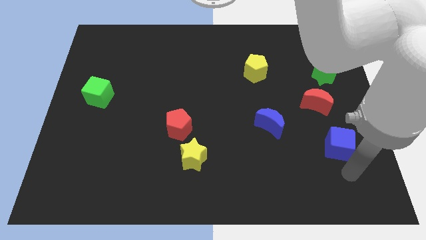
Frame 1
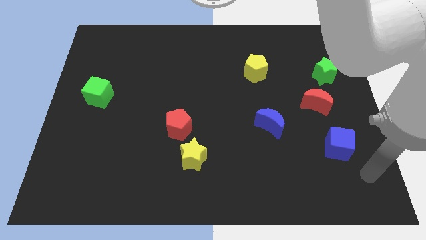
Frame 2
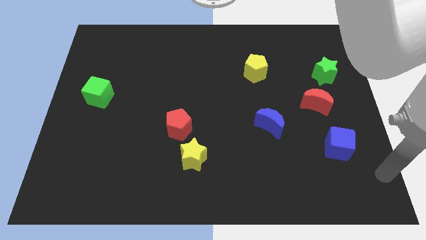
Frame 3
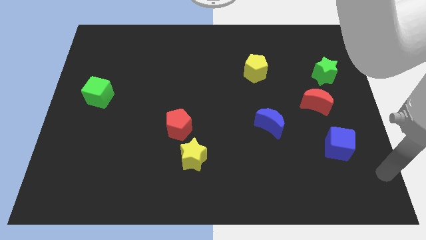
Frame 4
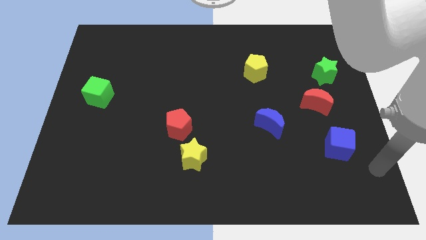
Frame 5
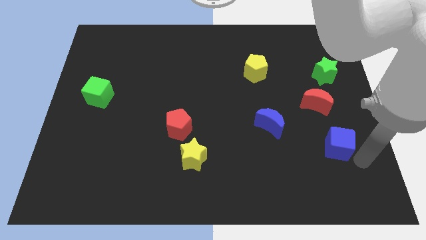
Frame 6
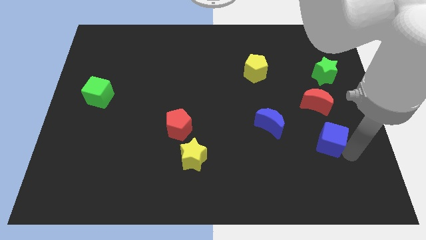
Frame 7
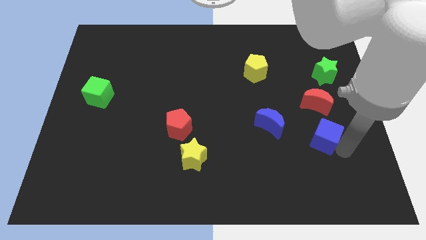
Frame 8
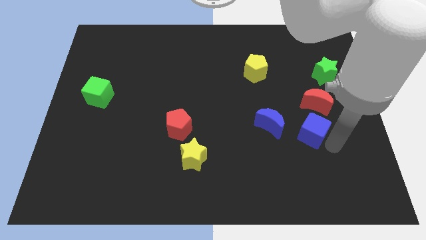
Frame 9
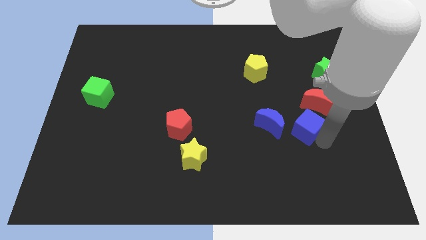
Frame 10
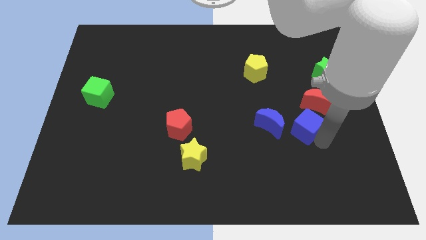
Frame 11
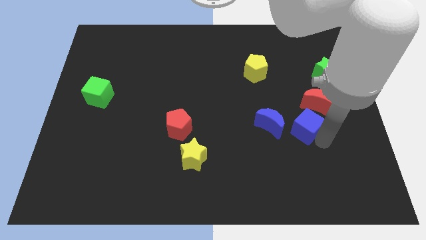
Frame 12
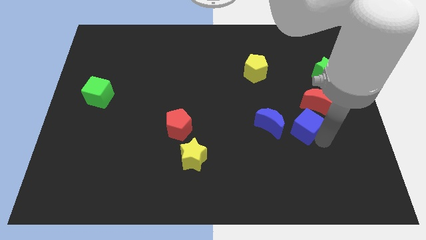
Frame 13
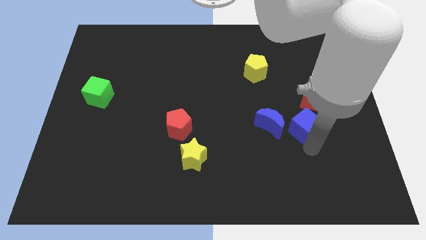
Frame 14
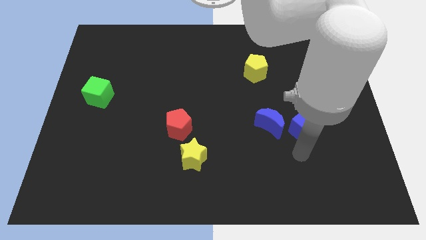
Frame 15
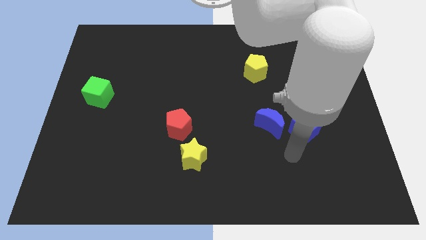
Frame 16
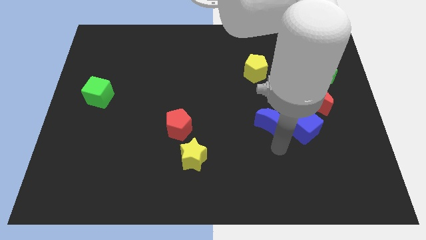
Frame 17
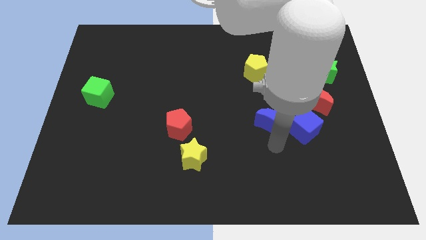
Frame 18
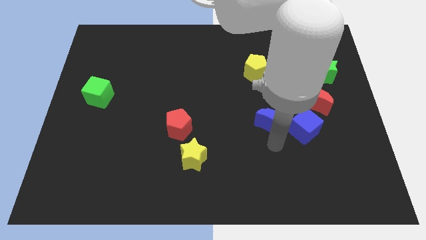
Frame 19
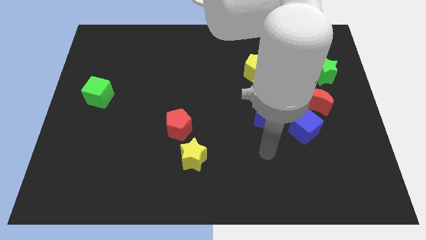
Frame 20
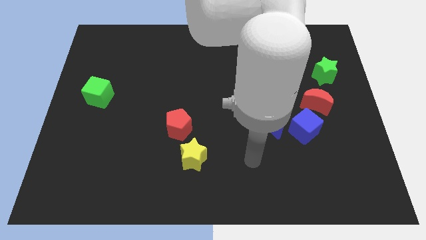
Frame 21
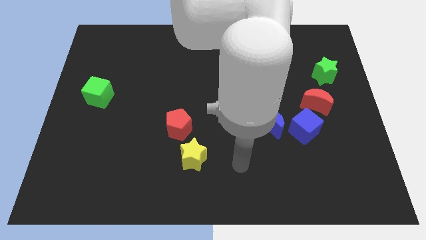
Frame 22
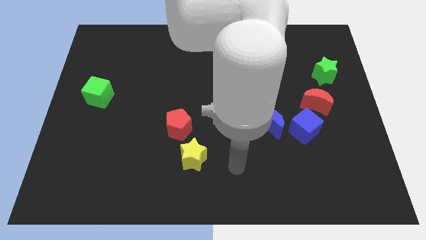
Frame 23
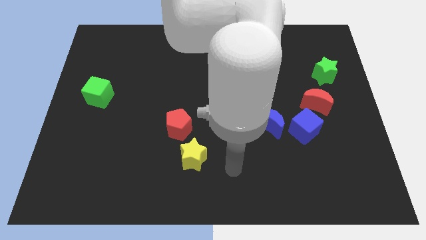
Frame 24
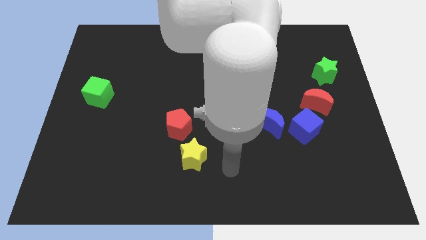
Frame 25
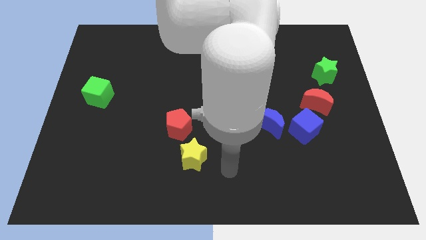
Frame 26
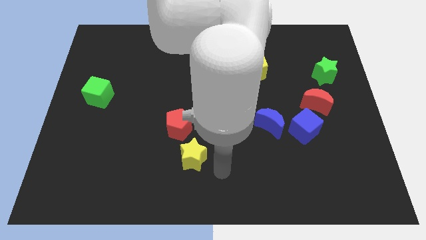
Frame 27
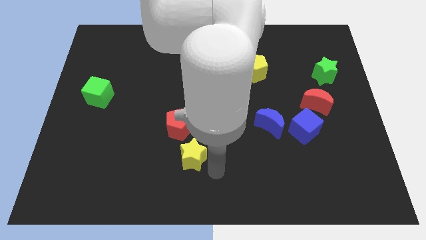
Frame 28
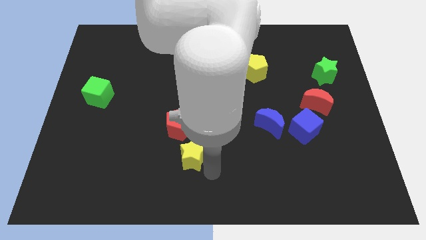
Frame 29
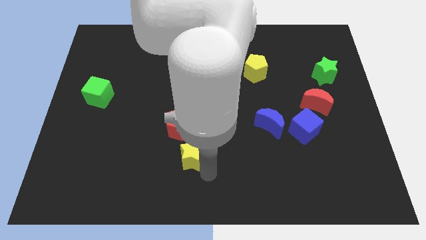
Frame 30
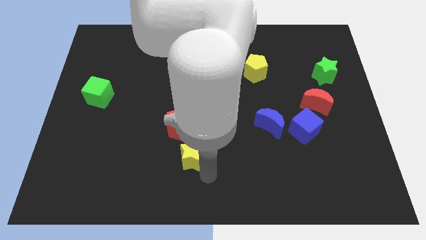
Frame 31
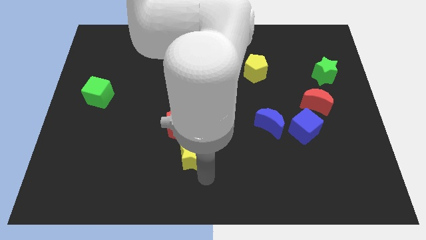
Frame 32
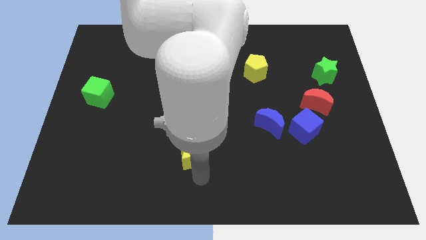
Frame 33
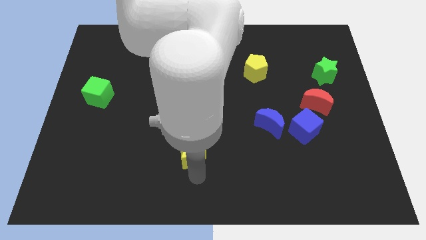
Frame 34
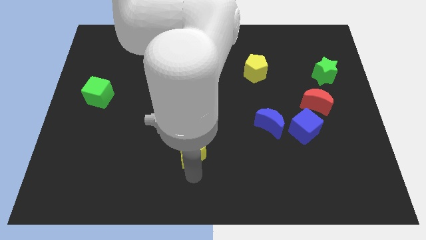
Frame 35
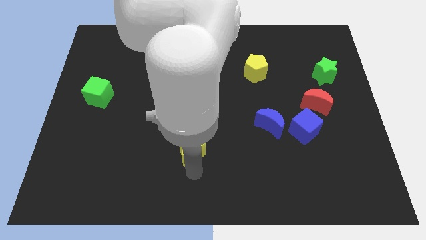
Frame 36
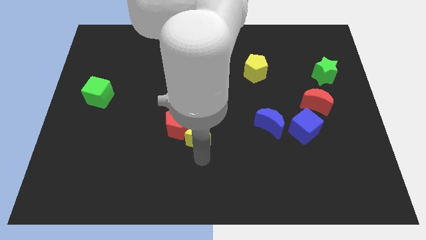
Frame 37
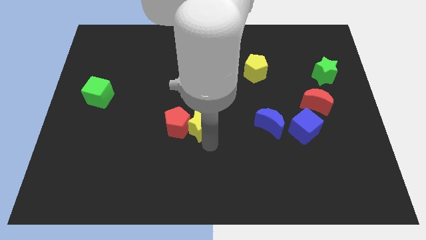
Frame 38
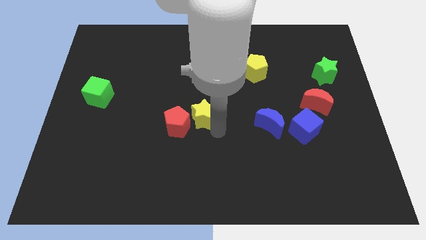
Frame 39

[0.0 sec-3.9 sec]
push the yellow star to the right of the red pentagon

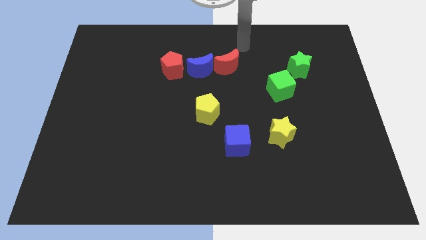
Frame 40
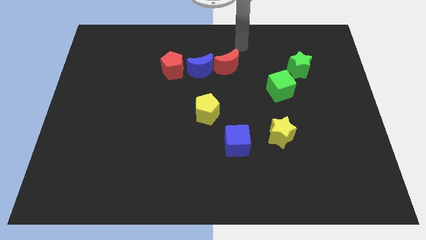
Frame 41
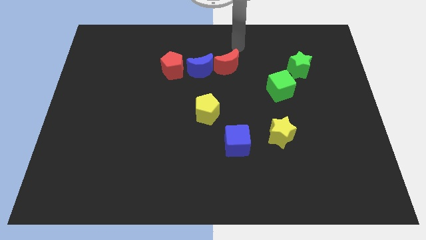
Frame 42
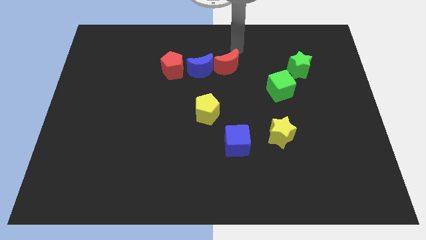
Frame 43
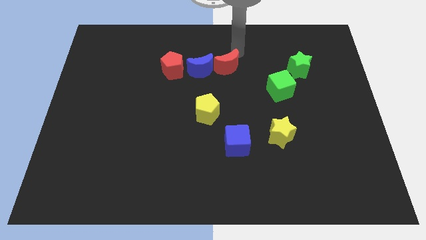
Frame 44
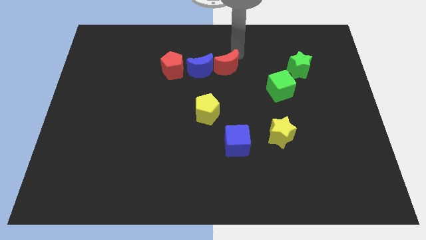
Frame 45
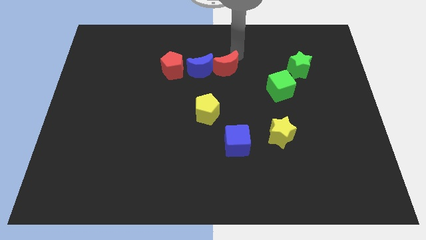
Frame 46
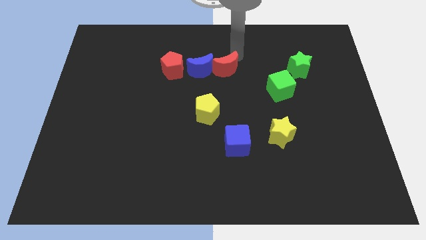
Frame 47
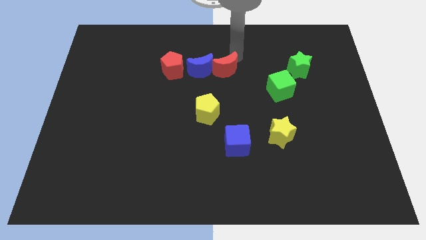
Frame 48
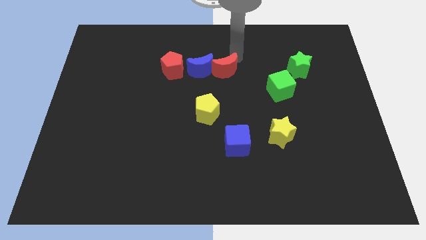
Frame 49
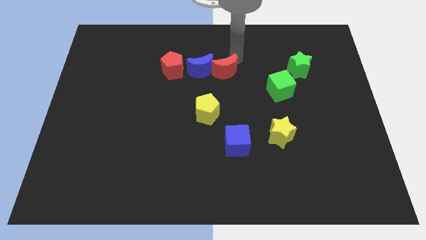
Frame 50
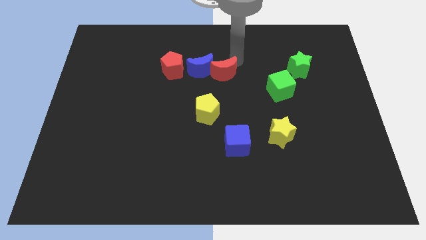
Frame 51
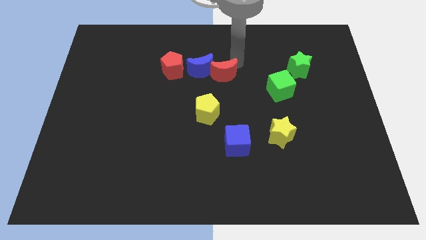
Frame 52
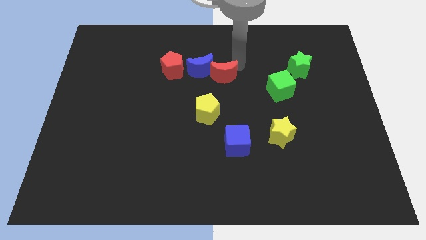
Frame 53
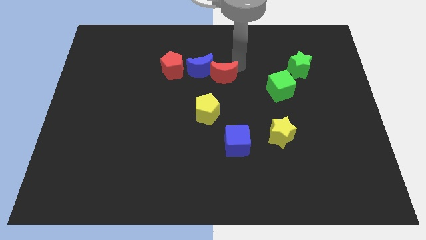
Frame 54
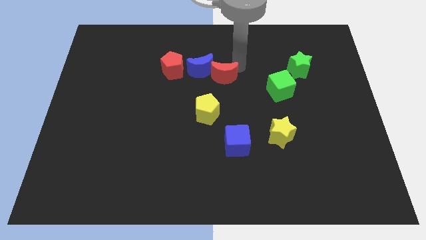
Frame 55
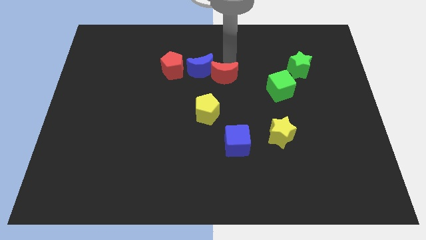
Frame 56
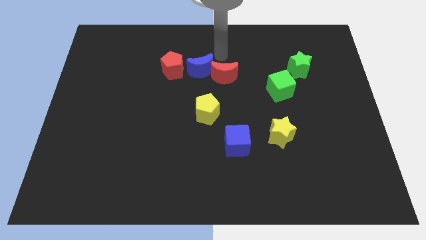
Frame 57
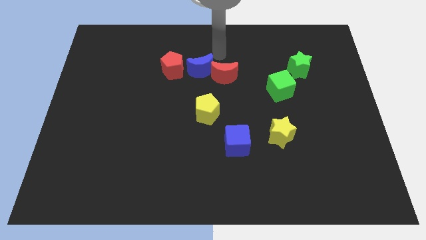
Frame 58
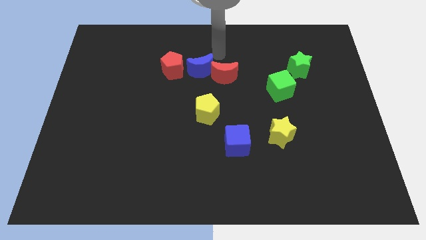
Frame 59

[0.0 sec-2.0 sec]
push the red moon to the bottom right to the blue moon

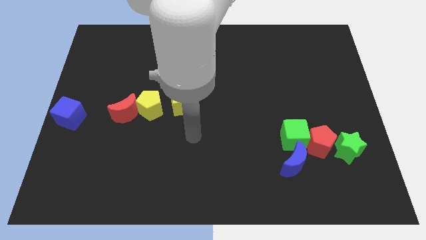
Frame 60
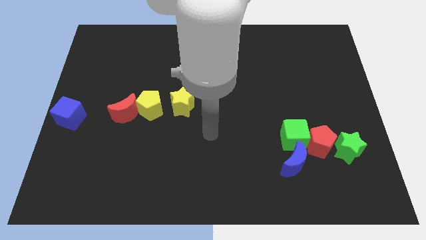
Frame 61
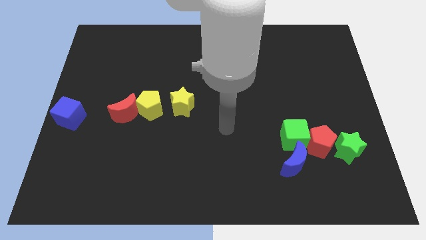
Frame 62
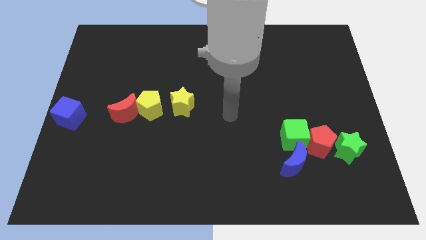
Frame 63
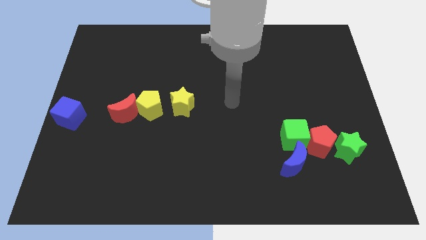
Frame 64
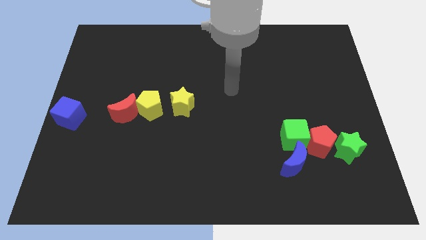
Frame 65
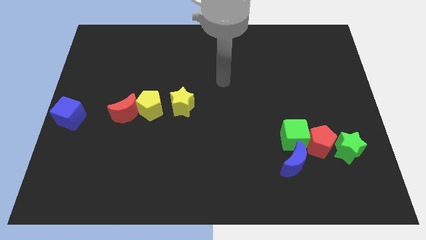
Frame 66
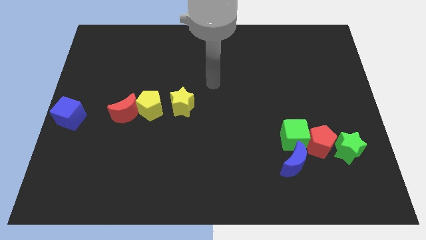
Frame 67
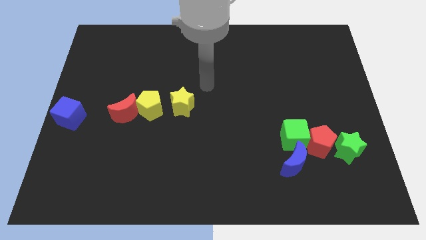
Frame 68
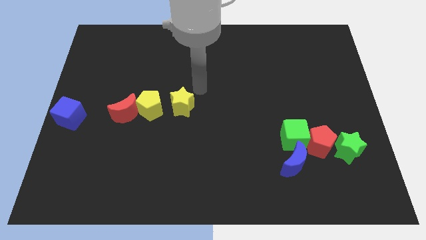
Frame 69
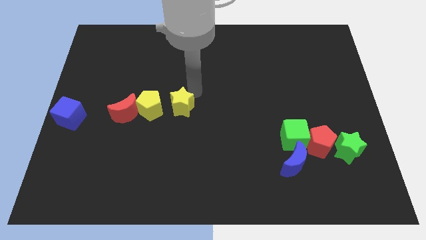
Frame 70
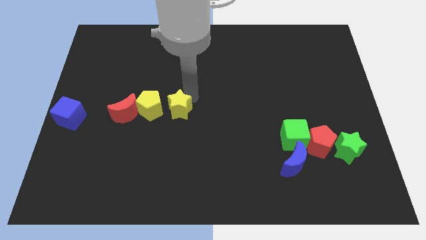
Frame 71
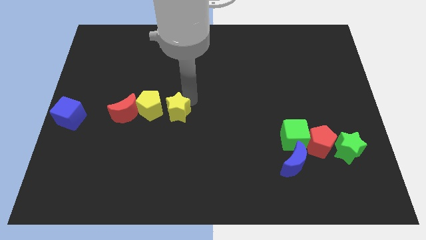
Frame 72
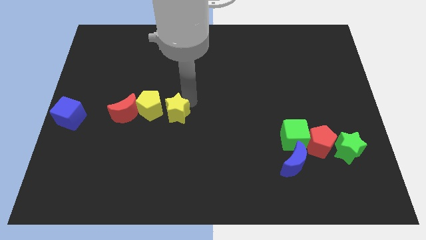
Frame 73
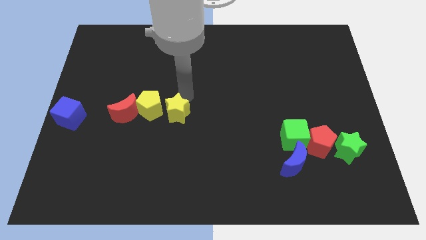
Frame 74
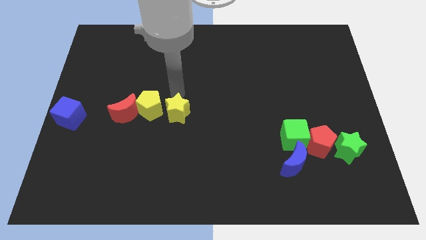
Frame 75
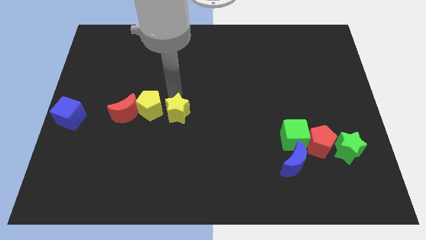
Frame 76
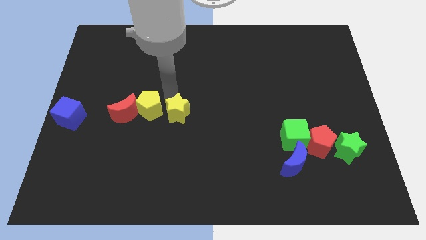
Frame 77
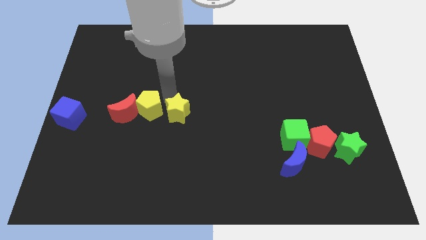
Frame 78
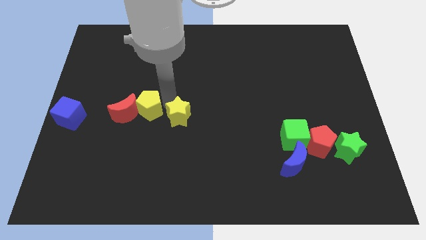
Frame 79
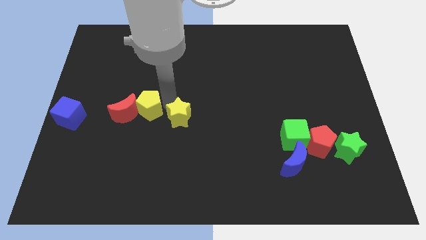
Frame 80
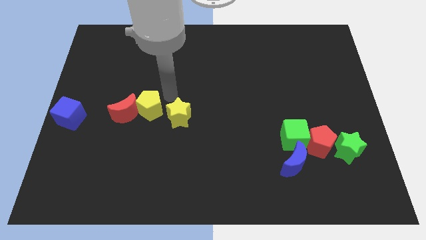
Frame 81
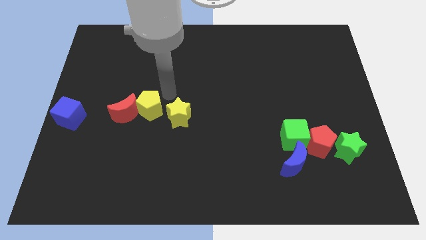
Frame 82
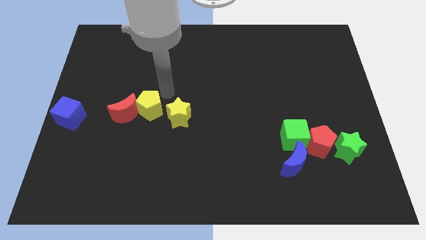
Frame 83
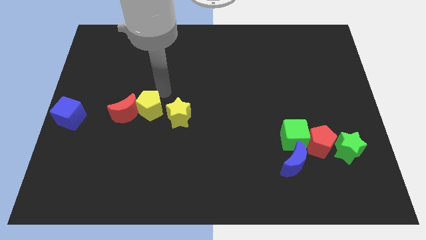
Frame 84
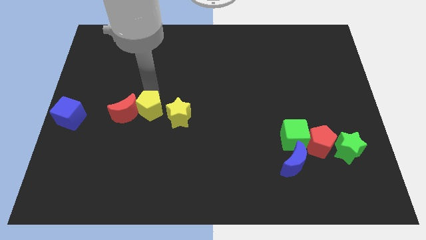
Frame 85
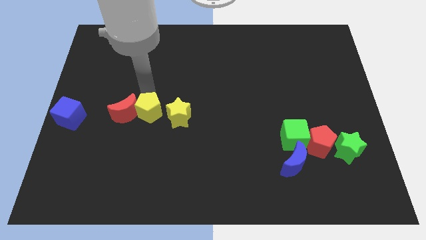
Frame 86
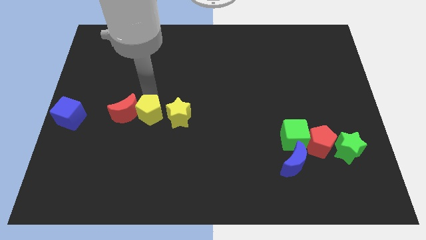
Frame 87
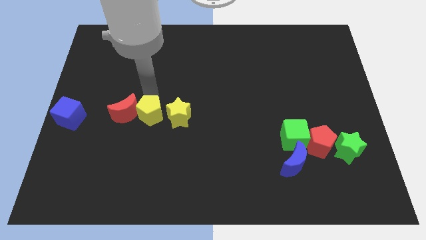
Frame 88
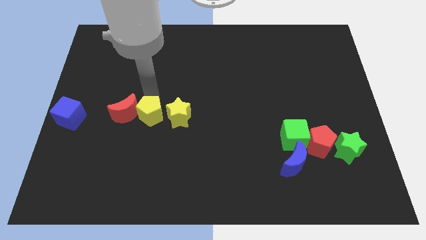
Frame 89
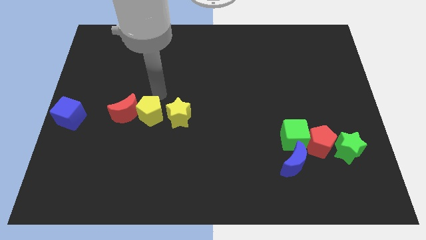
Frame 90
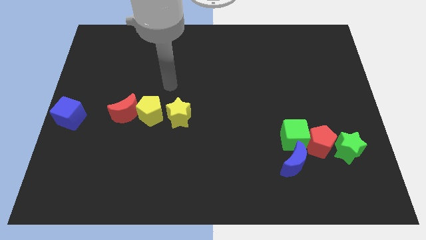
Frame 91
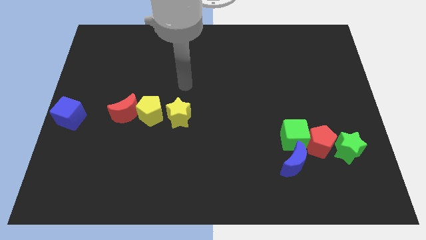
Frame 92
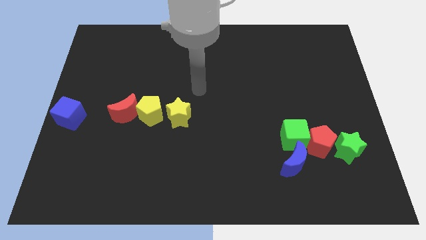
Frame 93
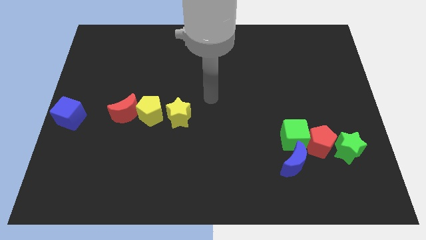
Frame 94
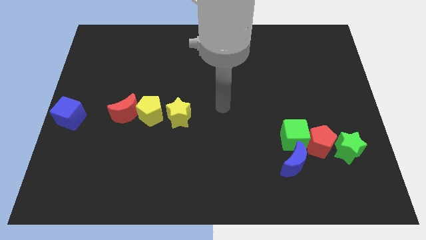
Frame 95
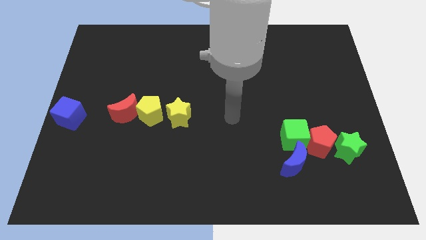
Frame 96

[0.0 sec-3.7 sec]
push the yellow blocks slightly downwards
